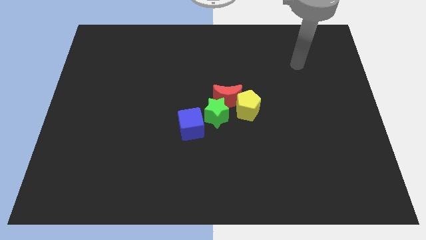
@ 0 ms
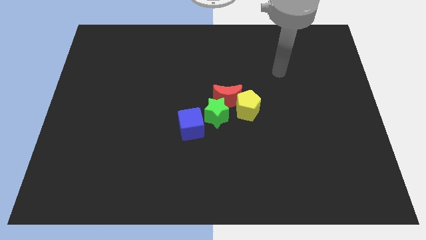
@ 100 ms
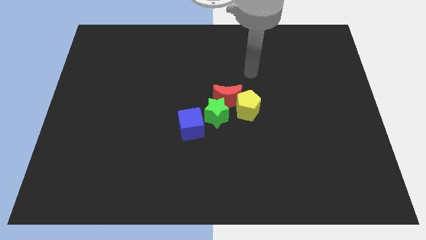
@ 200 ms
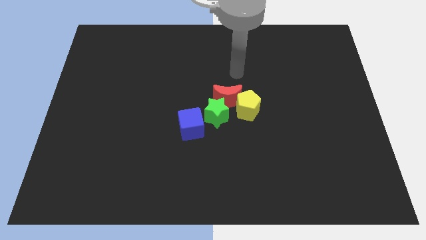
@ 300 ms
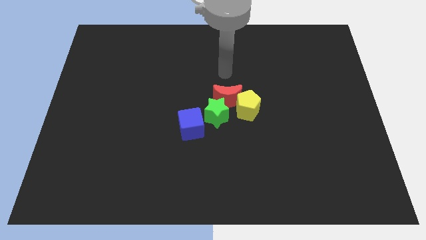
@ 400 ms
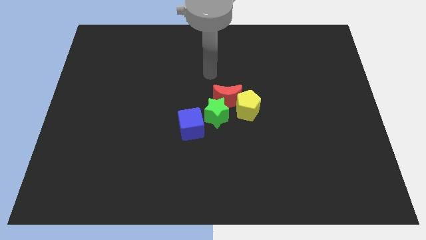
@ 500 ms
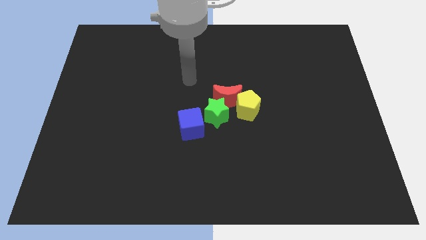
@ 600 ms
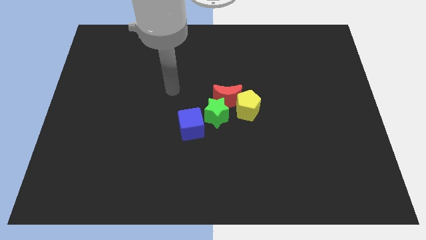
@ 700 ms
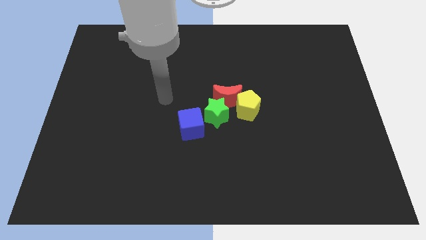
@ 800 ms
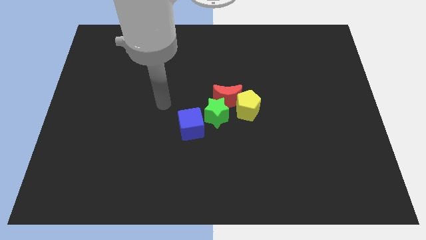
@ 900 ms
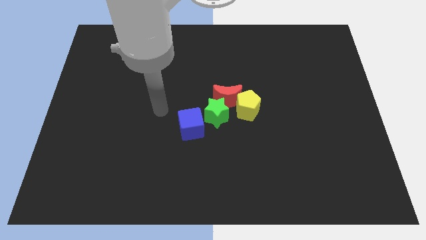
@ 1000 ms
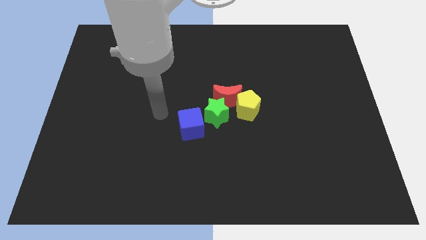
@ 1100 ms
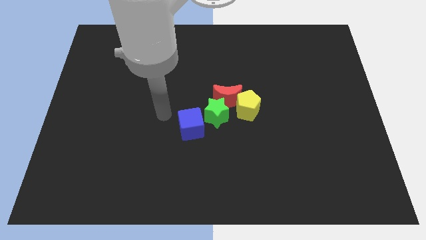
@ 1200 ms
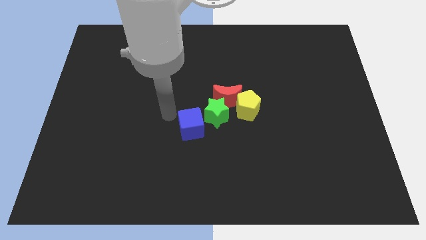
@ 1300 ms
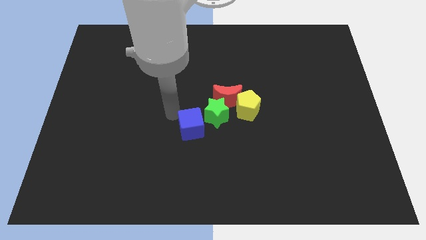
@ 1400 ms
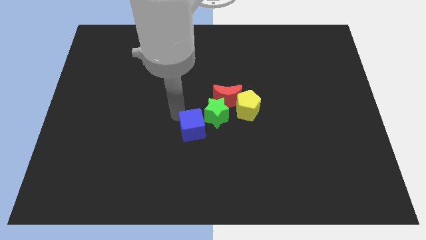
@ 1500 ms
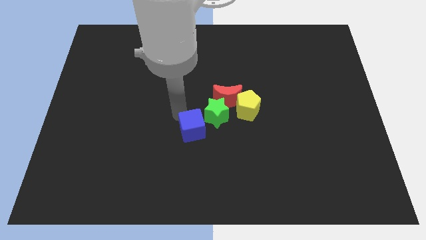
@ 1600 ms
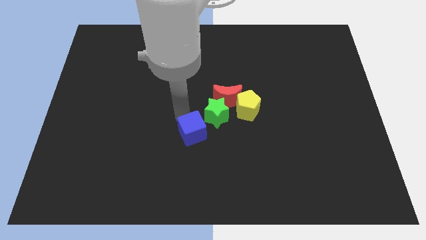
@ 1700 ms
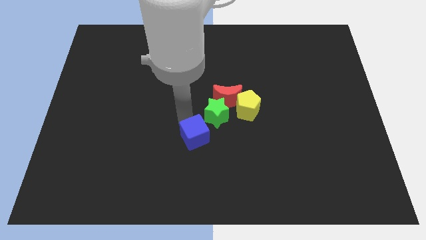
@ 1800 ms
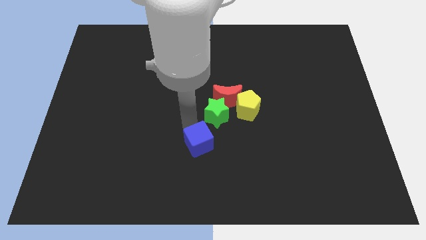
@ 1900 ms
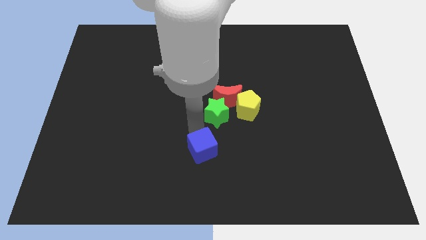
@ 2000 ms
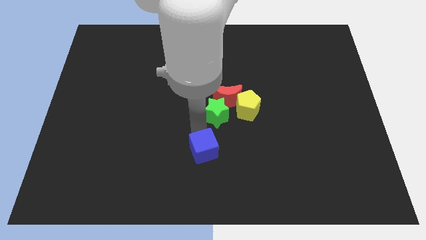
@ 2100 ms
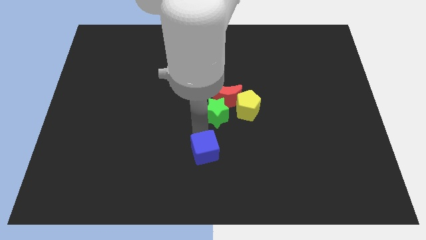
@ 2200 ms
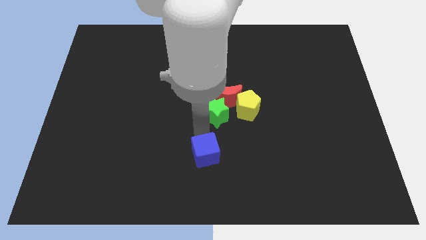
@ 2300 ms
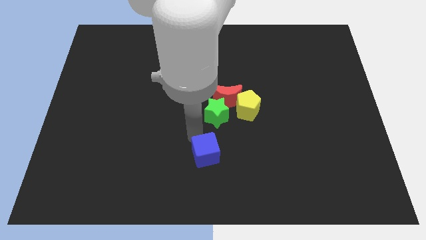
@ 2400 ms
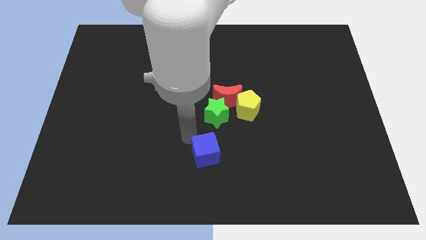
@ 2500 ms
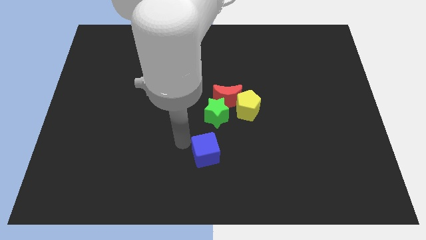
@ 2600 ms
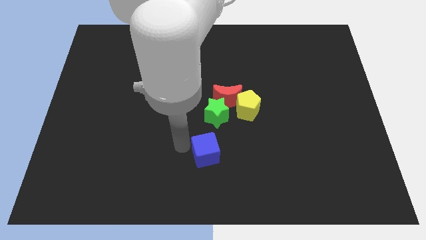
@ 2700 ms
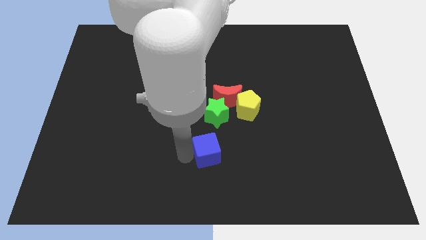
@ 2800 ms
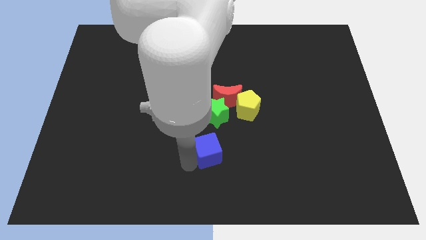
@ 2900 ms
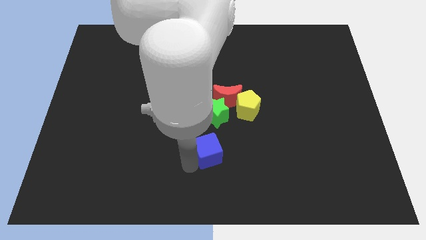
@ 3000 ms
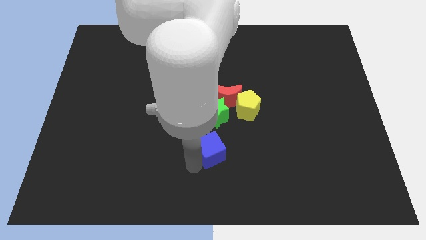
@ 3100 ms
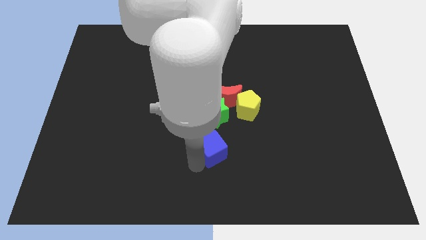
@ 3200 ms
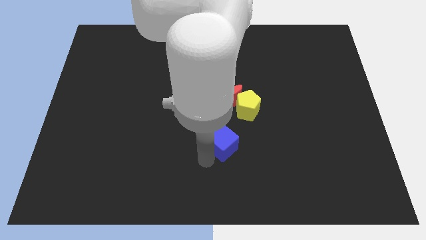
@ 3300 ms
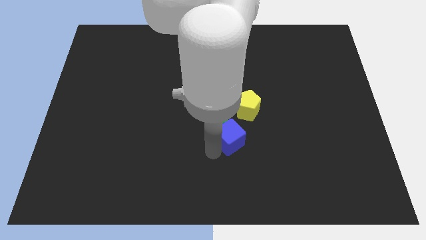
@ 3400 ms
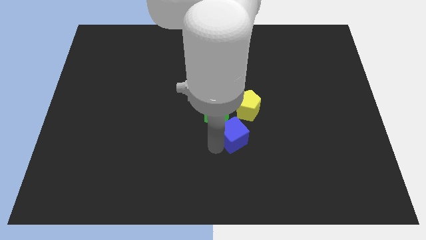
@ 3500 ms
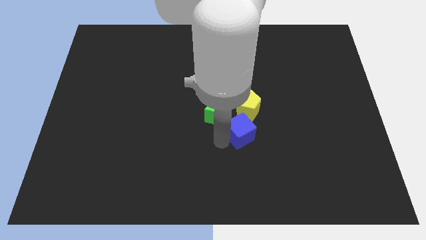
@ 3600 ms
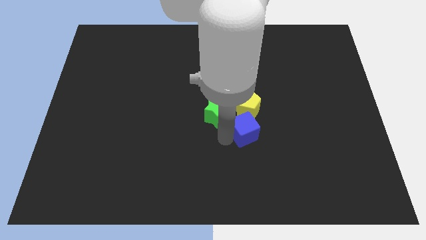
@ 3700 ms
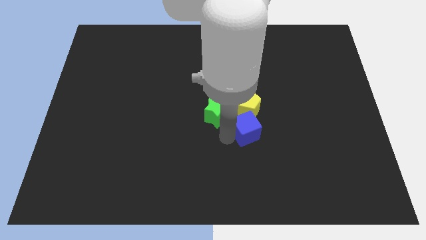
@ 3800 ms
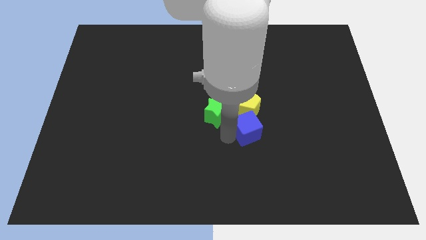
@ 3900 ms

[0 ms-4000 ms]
move the blue cube to the pentagon

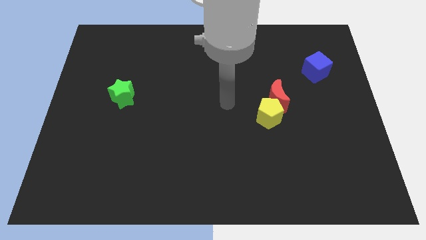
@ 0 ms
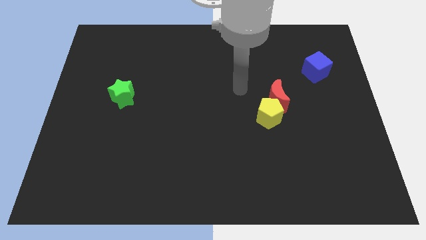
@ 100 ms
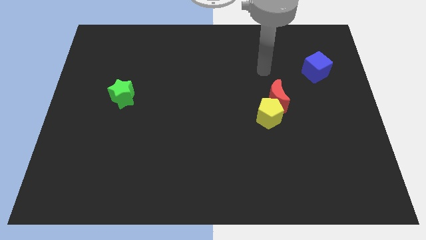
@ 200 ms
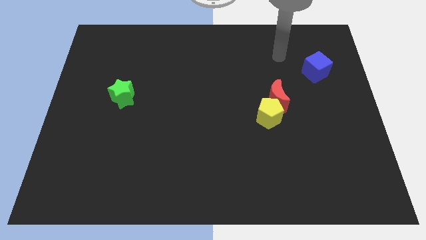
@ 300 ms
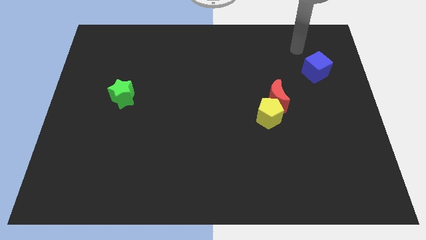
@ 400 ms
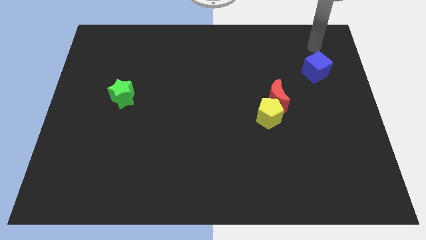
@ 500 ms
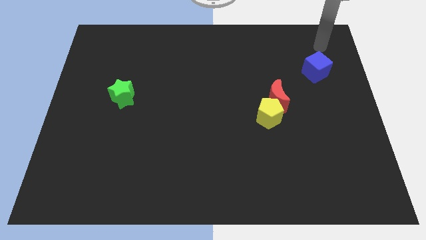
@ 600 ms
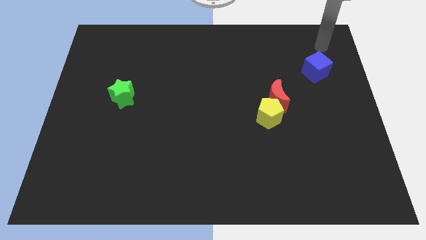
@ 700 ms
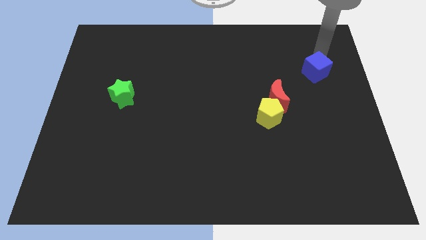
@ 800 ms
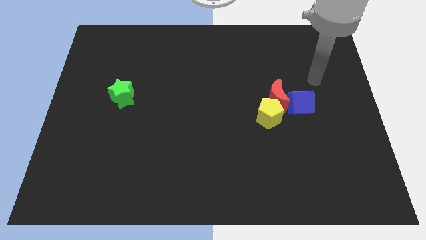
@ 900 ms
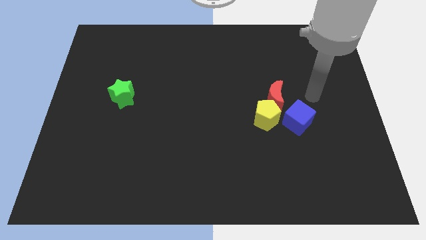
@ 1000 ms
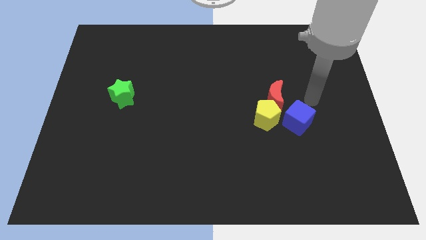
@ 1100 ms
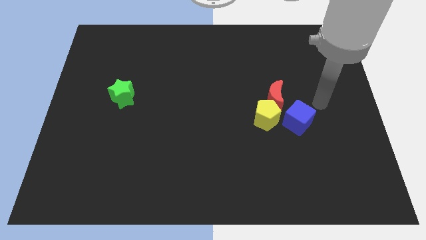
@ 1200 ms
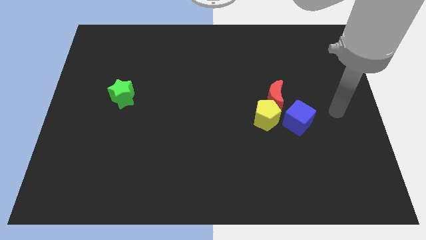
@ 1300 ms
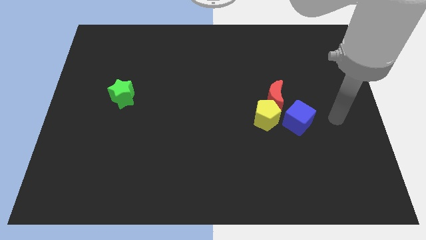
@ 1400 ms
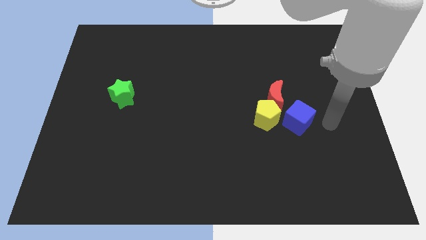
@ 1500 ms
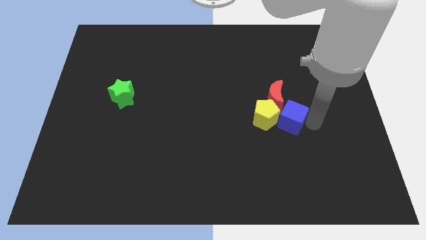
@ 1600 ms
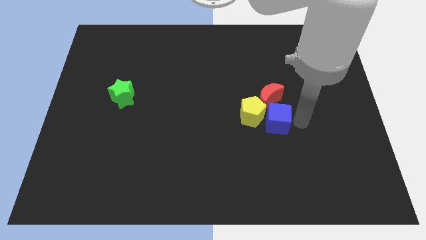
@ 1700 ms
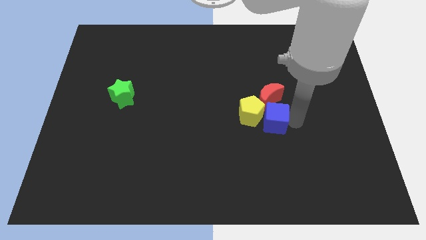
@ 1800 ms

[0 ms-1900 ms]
put the cube close to the yellow pentagon

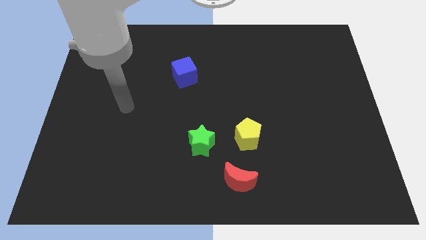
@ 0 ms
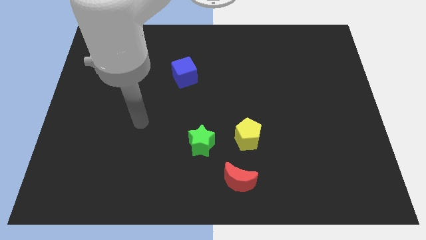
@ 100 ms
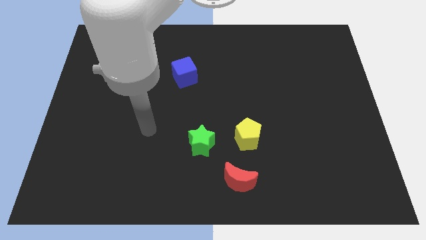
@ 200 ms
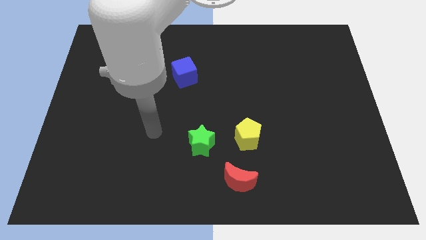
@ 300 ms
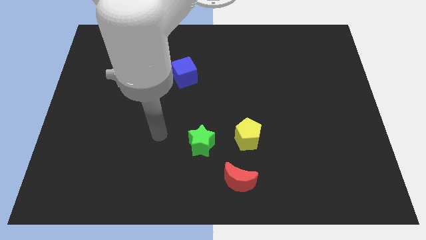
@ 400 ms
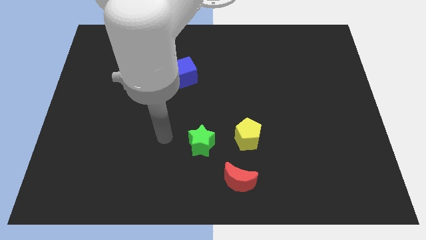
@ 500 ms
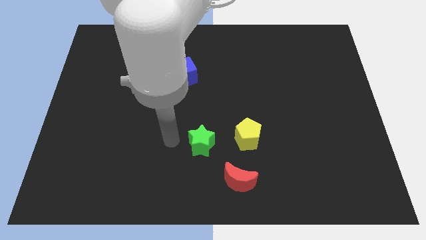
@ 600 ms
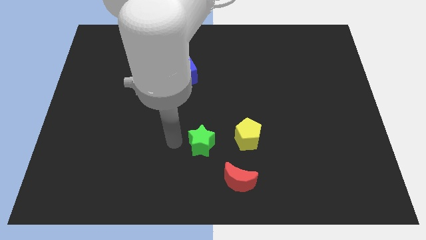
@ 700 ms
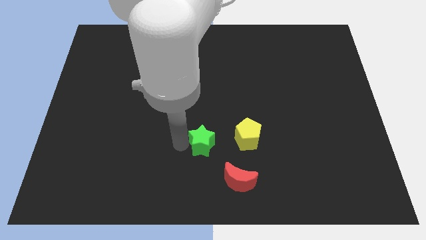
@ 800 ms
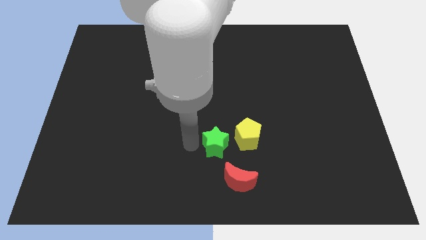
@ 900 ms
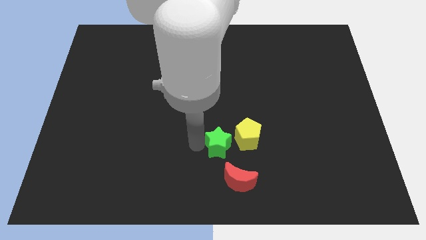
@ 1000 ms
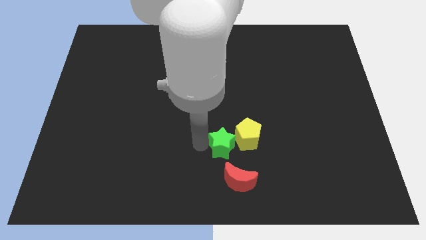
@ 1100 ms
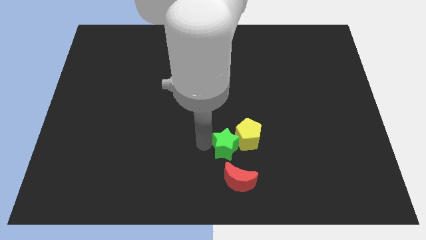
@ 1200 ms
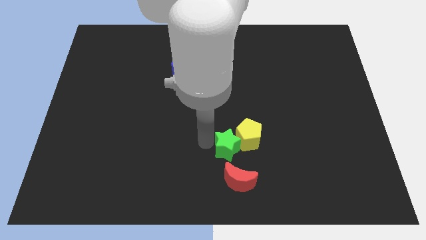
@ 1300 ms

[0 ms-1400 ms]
move the star towards the yellow pentagon

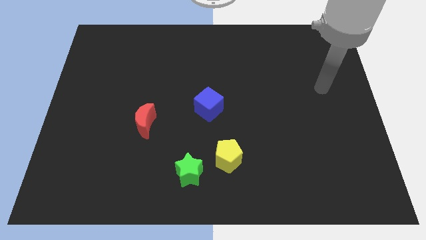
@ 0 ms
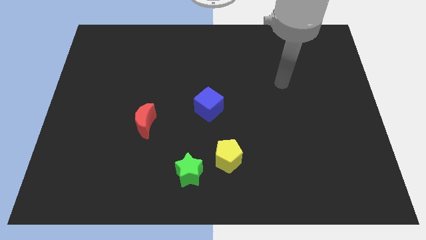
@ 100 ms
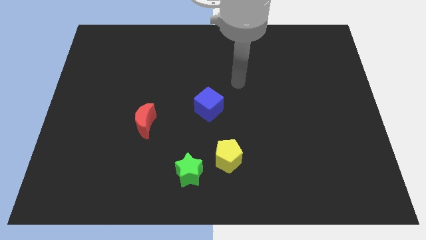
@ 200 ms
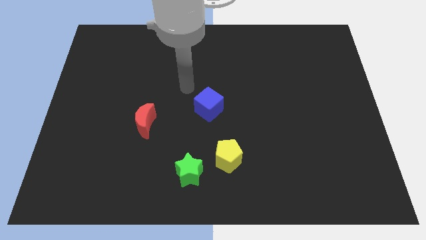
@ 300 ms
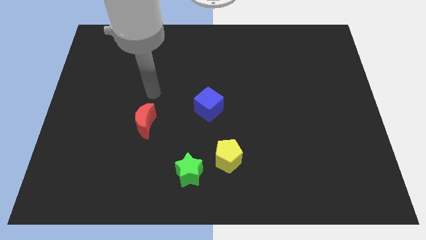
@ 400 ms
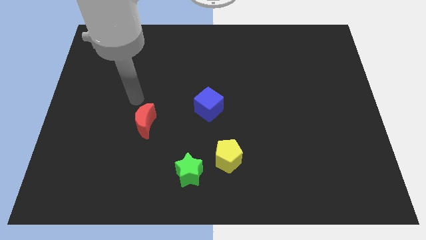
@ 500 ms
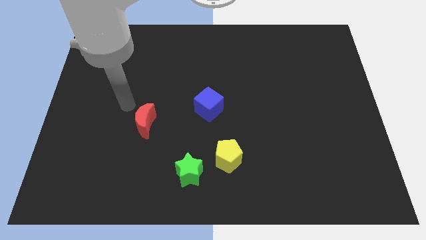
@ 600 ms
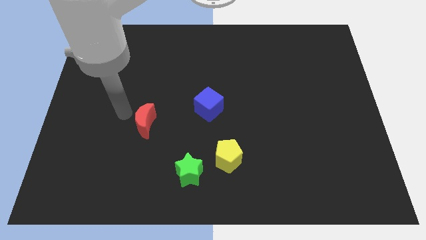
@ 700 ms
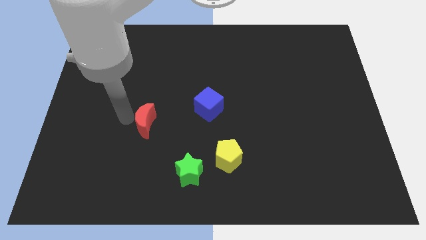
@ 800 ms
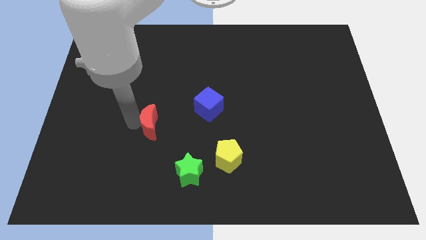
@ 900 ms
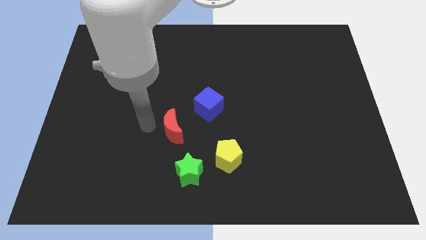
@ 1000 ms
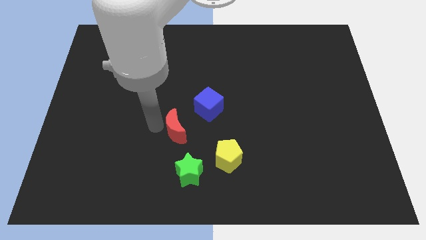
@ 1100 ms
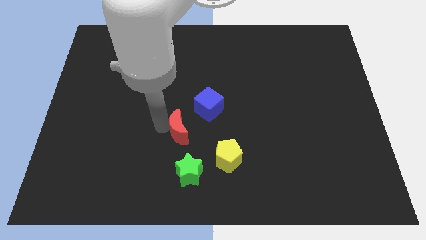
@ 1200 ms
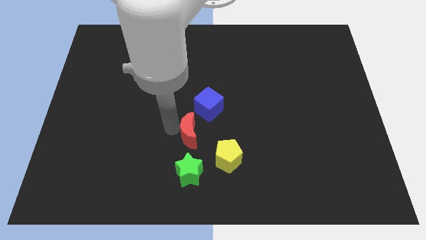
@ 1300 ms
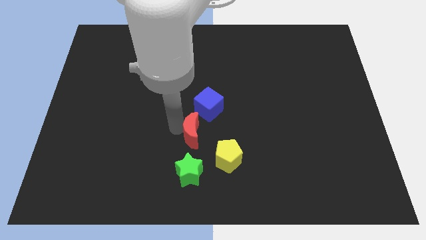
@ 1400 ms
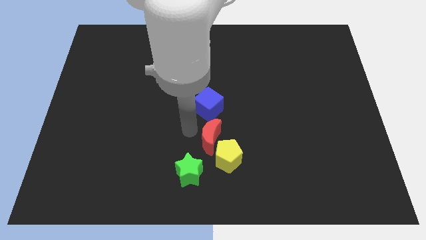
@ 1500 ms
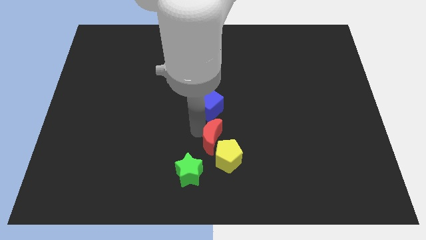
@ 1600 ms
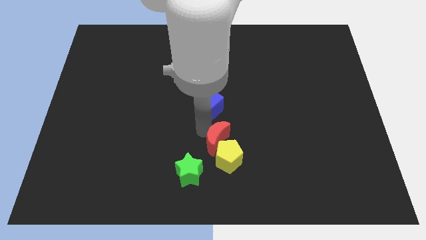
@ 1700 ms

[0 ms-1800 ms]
push the red block to the yellow block
